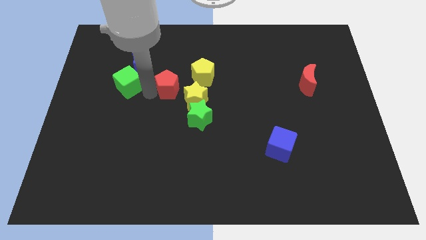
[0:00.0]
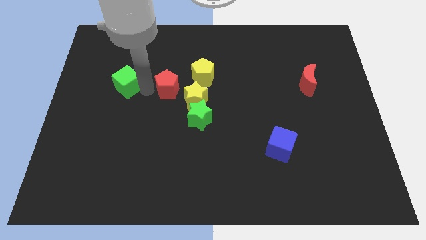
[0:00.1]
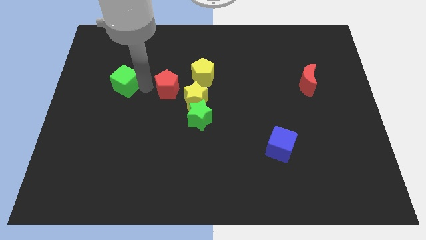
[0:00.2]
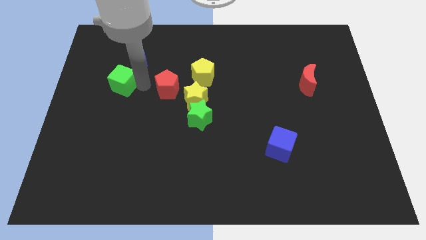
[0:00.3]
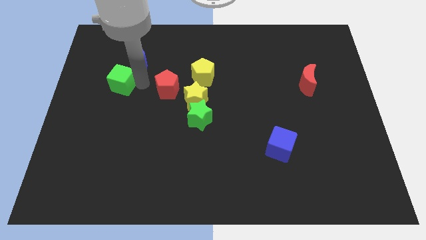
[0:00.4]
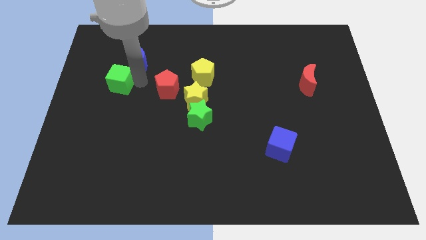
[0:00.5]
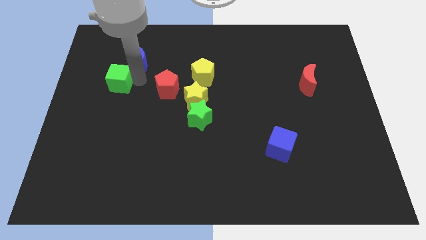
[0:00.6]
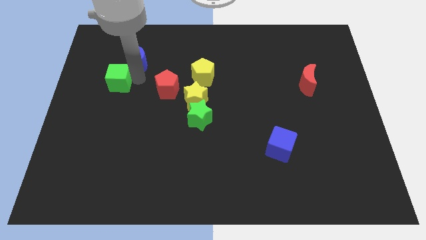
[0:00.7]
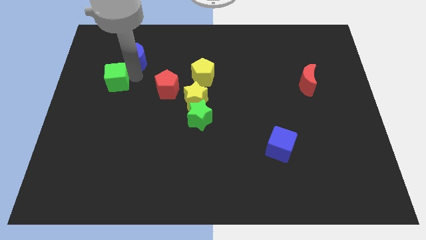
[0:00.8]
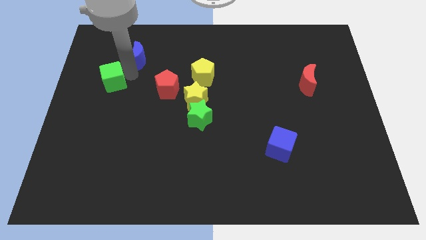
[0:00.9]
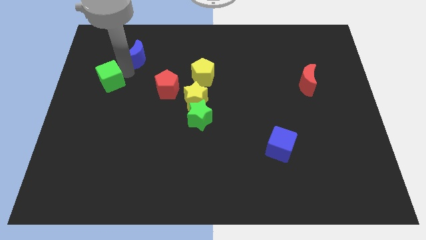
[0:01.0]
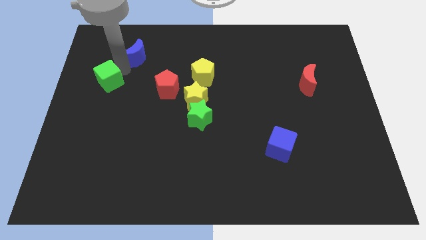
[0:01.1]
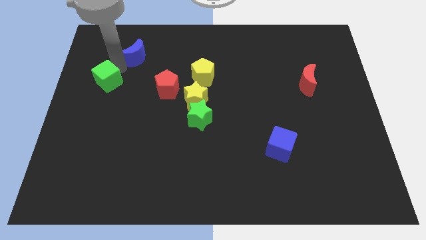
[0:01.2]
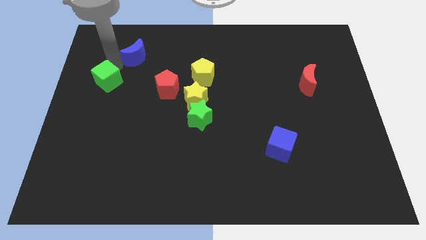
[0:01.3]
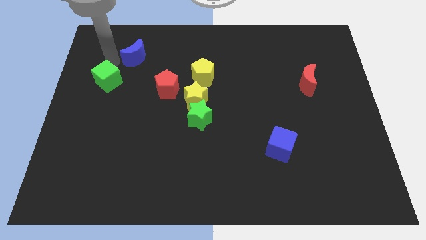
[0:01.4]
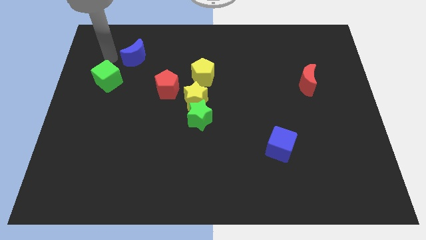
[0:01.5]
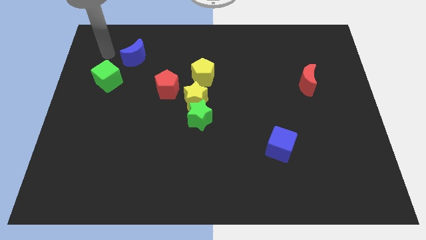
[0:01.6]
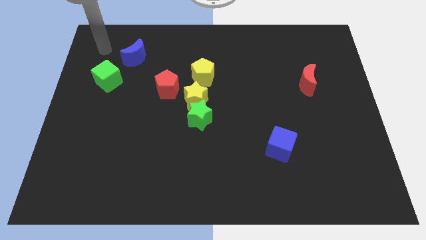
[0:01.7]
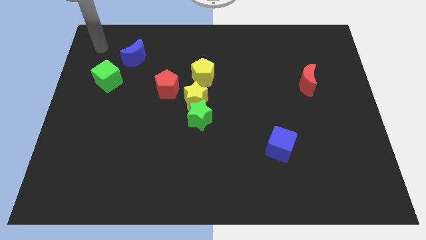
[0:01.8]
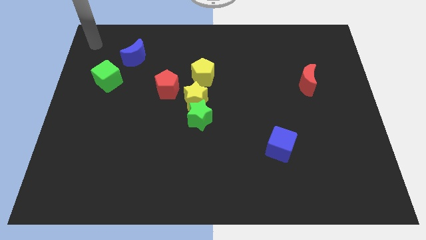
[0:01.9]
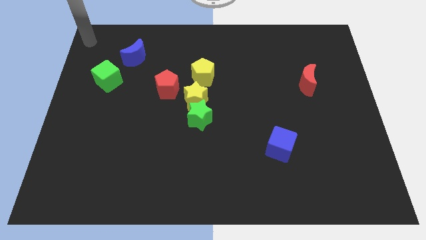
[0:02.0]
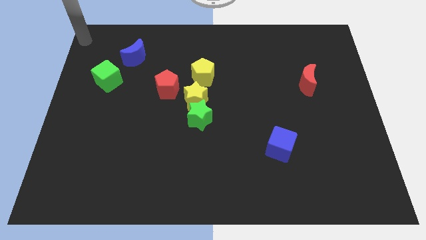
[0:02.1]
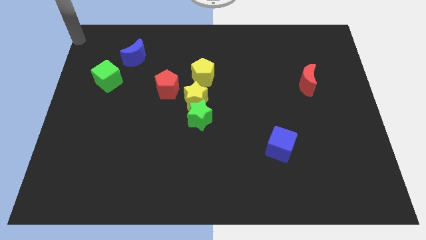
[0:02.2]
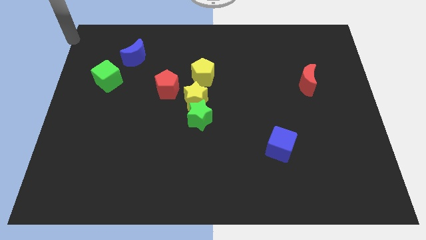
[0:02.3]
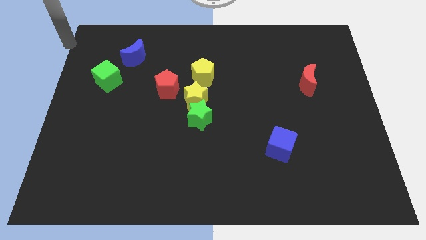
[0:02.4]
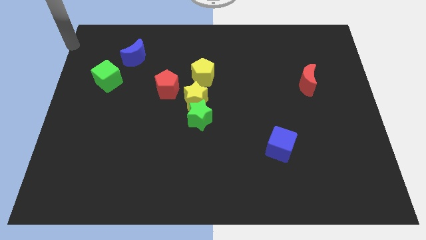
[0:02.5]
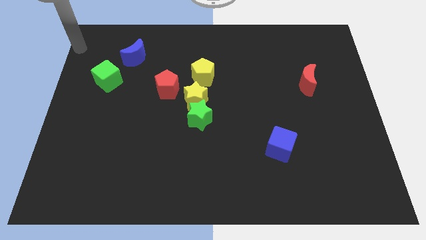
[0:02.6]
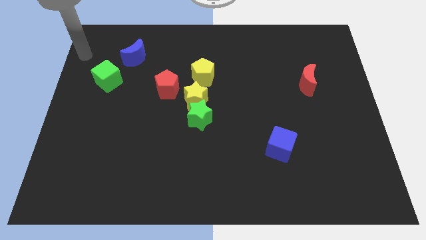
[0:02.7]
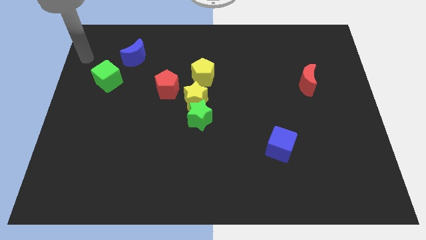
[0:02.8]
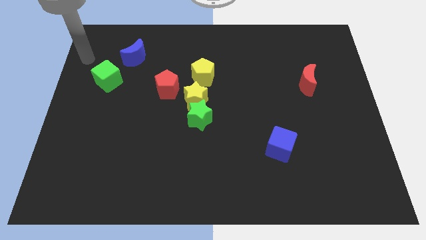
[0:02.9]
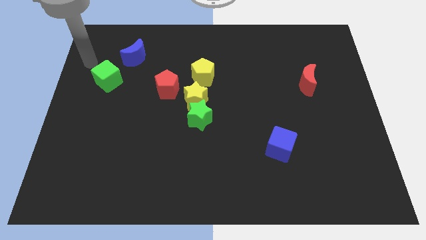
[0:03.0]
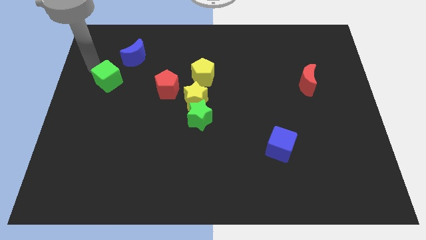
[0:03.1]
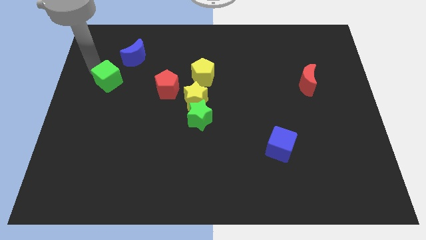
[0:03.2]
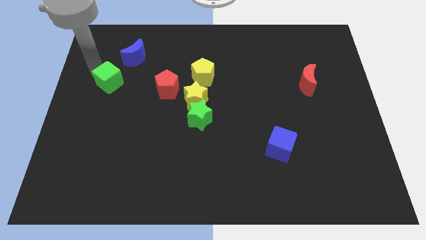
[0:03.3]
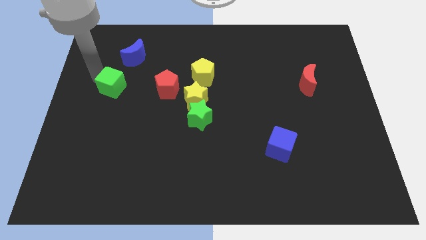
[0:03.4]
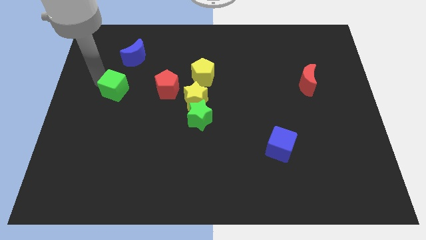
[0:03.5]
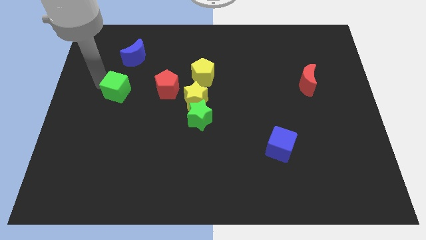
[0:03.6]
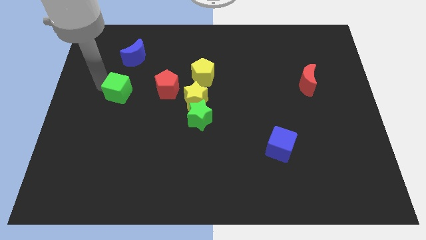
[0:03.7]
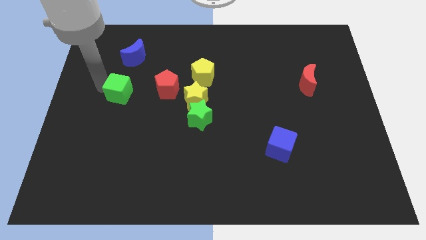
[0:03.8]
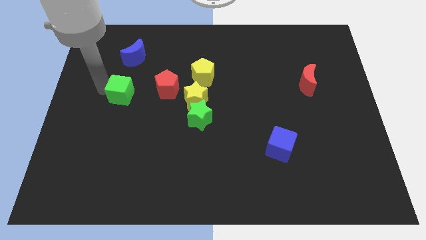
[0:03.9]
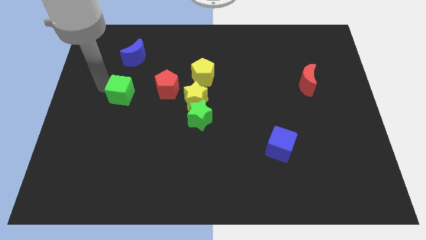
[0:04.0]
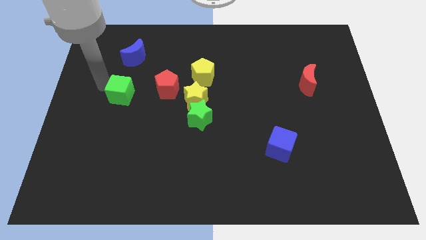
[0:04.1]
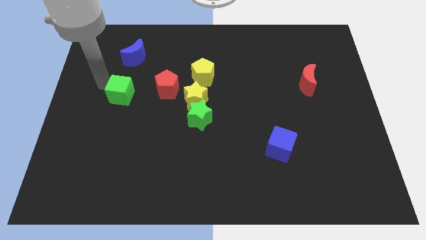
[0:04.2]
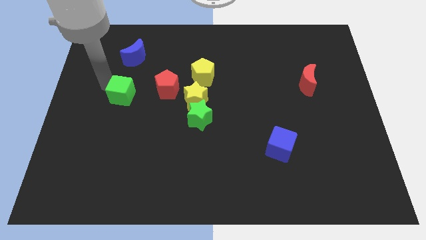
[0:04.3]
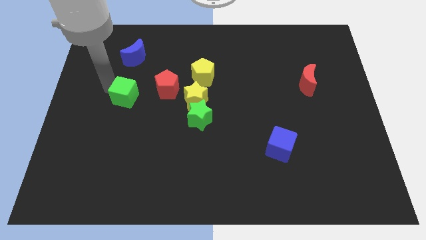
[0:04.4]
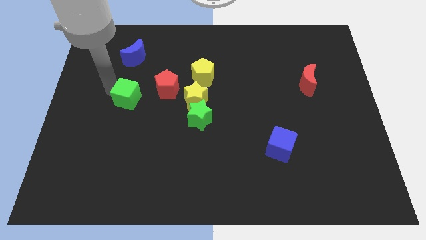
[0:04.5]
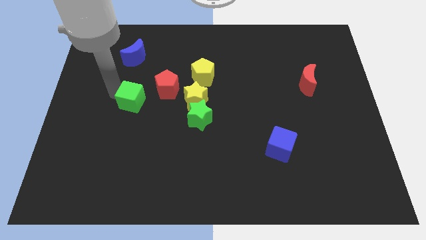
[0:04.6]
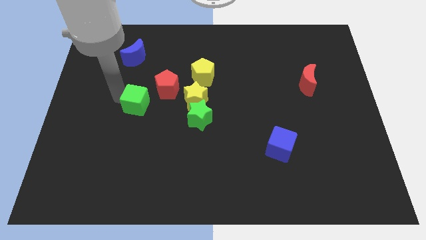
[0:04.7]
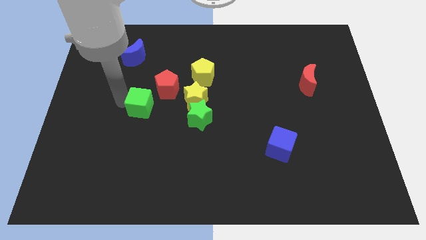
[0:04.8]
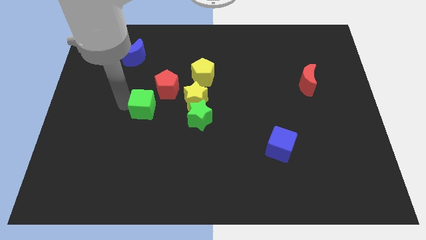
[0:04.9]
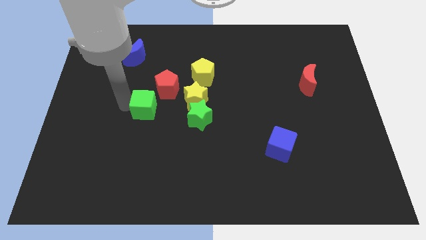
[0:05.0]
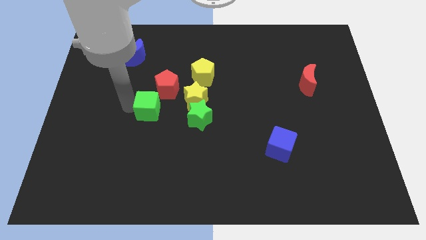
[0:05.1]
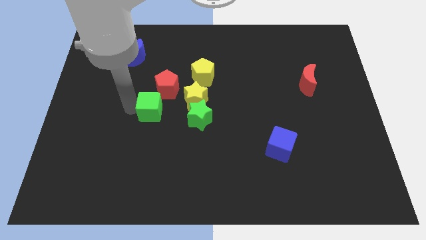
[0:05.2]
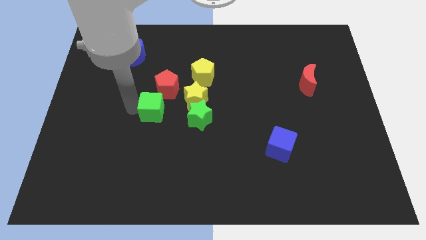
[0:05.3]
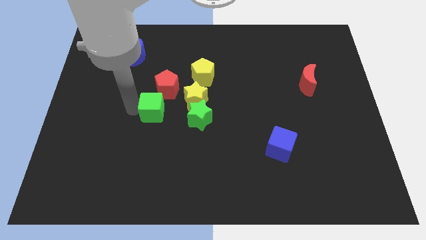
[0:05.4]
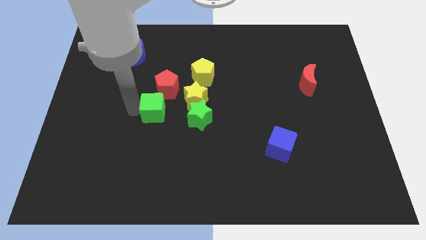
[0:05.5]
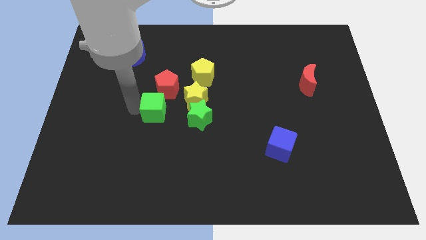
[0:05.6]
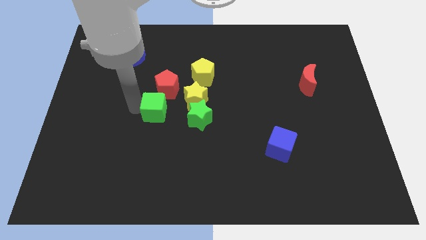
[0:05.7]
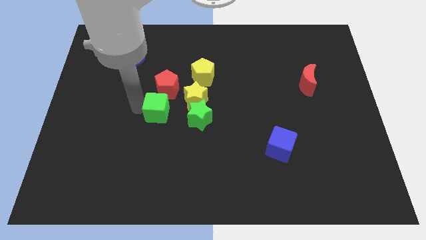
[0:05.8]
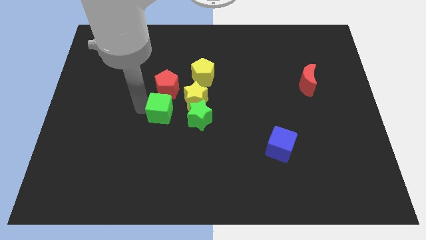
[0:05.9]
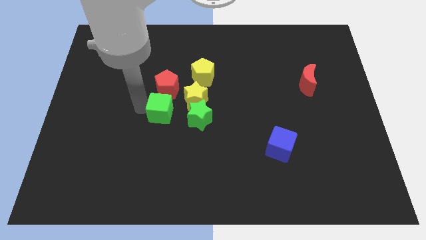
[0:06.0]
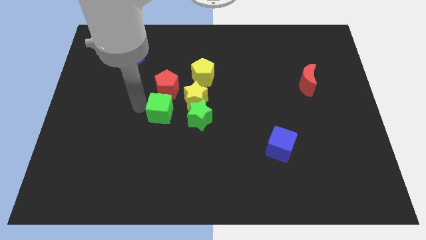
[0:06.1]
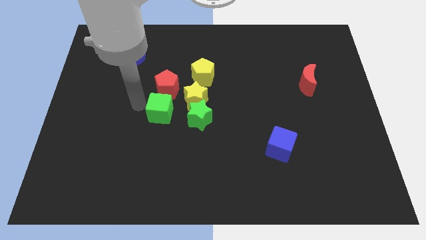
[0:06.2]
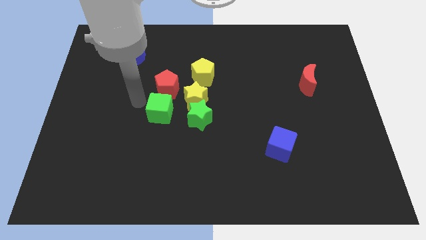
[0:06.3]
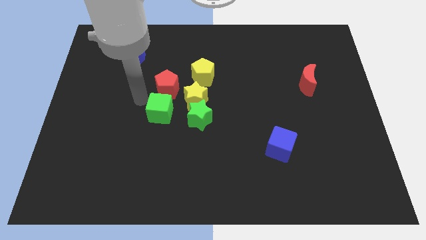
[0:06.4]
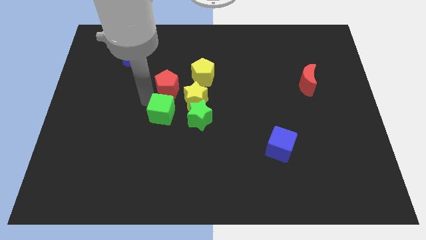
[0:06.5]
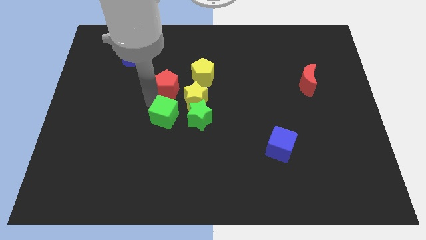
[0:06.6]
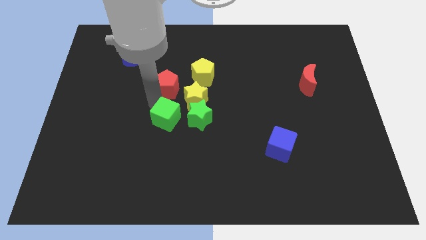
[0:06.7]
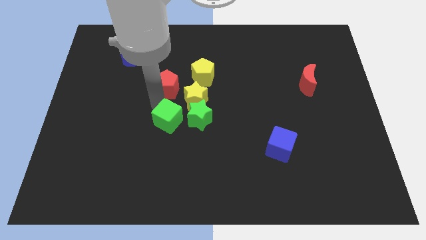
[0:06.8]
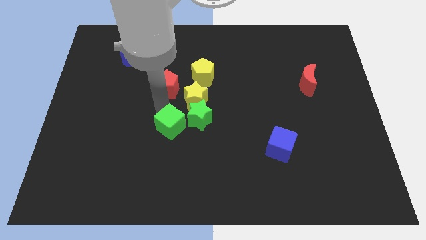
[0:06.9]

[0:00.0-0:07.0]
move the green cube to the left of the green star

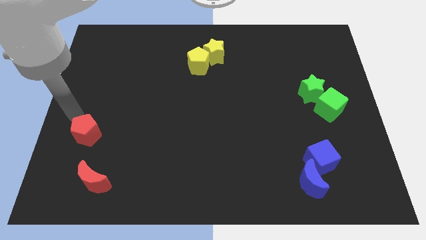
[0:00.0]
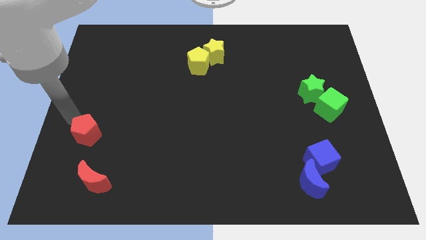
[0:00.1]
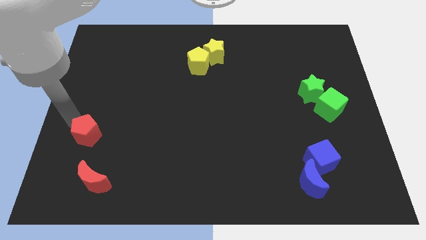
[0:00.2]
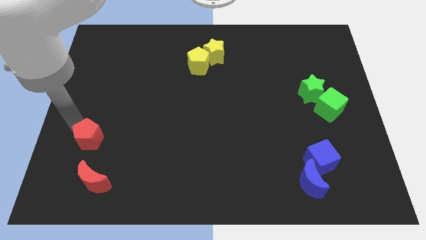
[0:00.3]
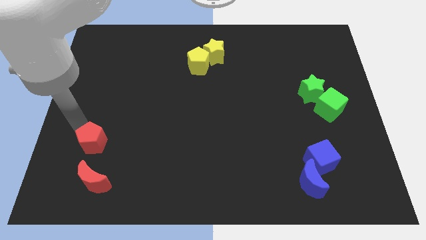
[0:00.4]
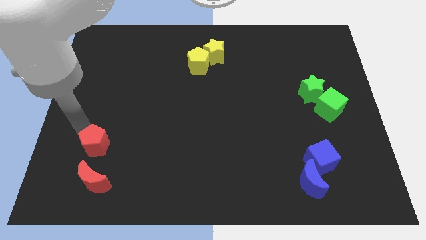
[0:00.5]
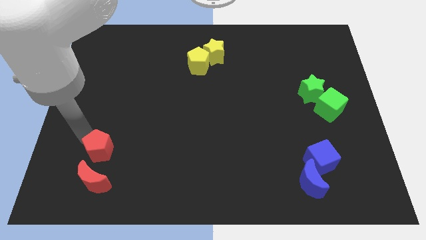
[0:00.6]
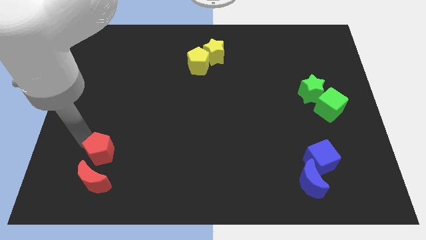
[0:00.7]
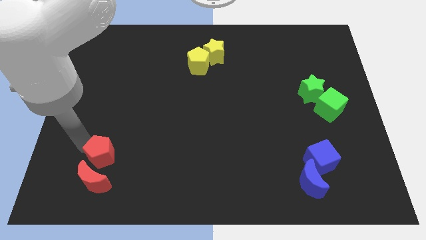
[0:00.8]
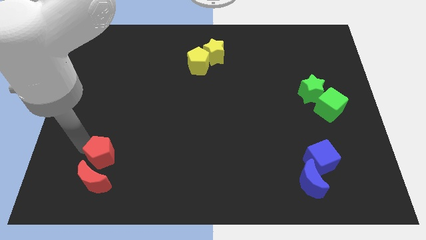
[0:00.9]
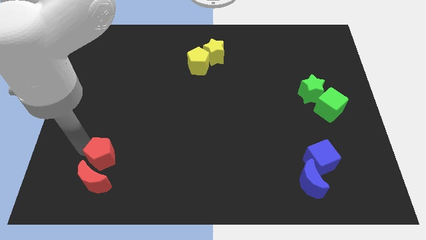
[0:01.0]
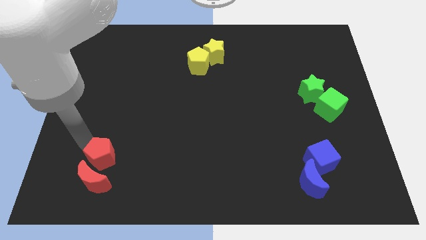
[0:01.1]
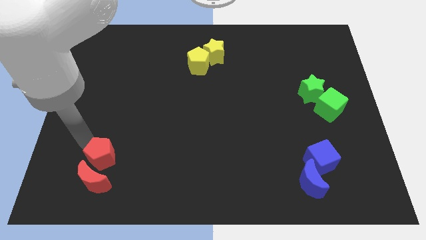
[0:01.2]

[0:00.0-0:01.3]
move the red pentagon to the top of the red crescent

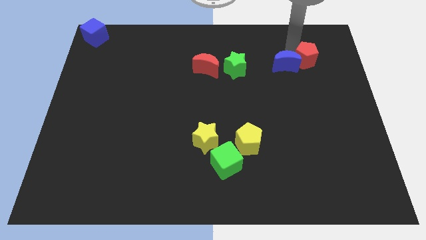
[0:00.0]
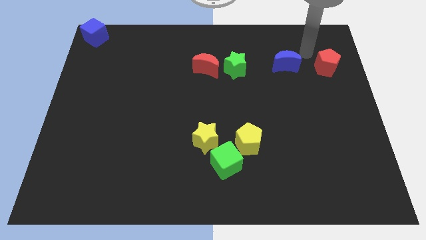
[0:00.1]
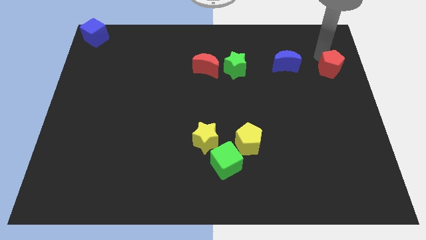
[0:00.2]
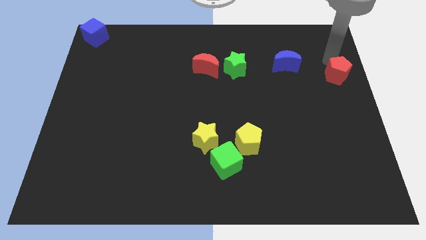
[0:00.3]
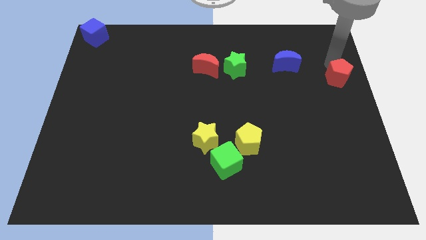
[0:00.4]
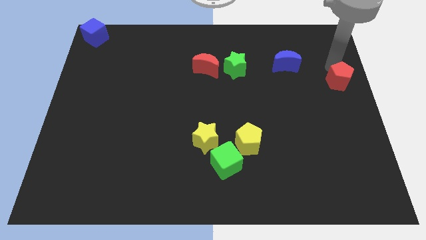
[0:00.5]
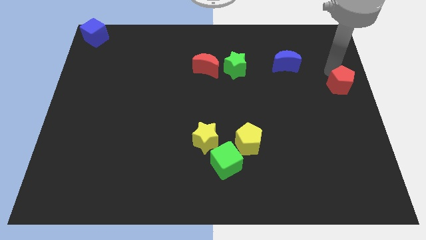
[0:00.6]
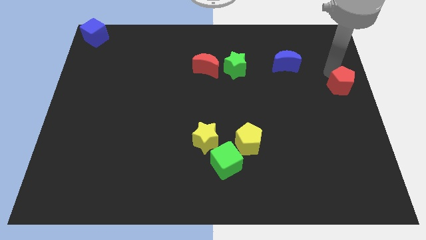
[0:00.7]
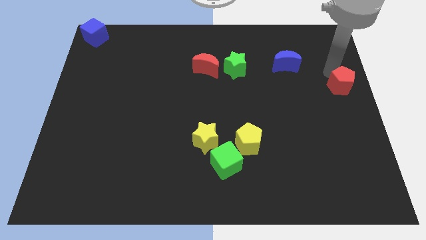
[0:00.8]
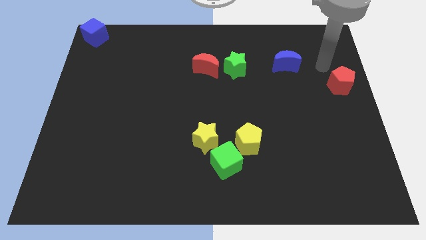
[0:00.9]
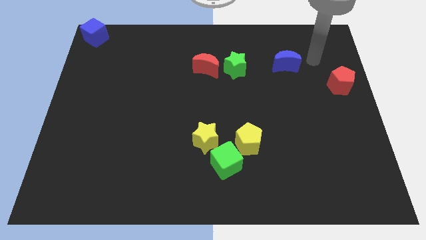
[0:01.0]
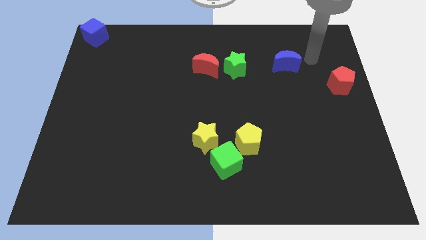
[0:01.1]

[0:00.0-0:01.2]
push the red pentagon slightly toward the bottom
